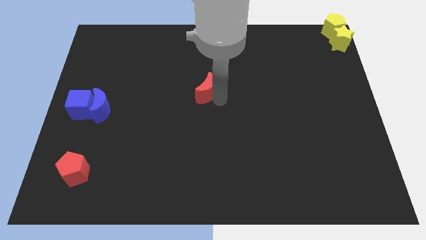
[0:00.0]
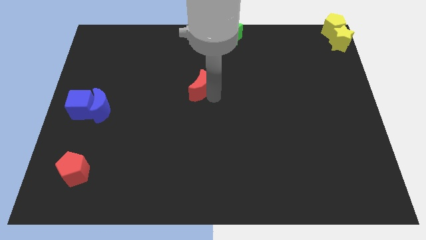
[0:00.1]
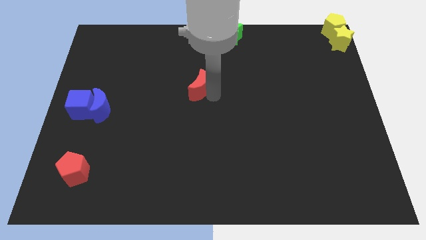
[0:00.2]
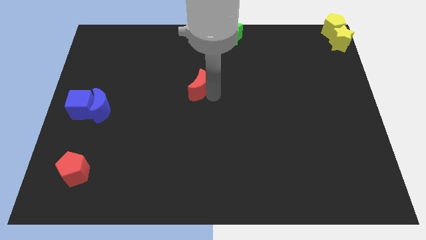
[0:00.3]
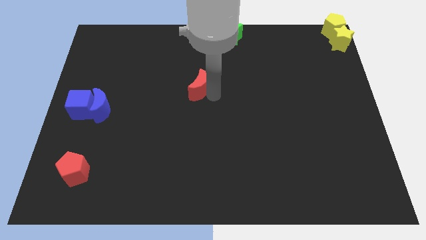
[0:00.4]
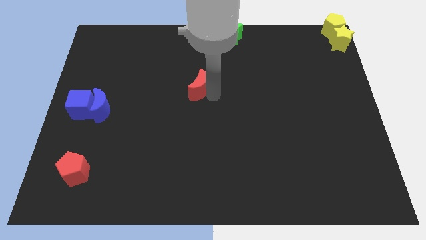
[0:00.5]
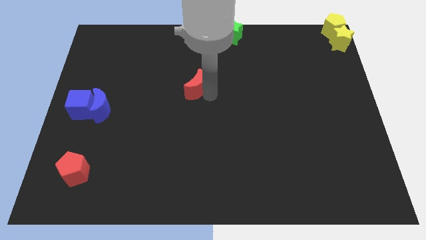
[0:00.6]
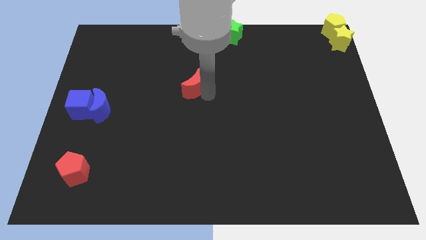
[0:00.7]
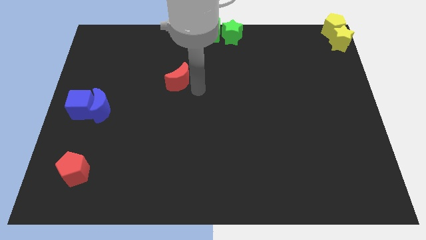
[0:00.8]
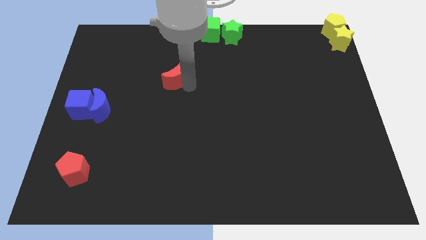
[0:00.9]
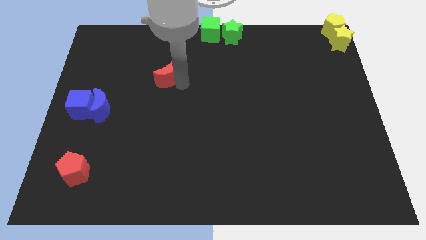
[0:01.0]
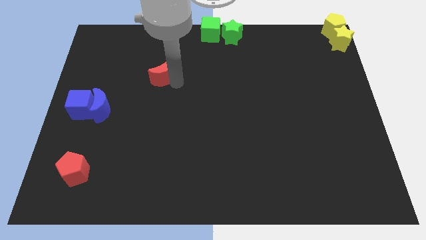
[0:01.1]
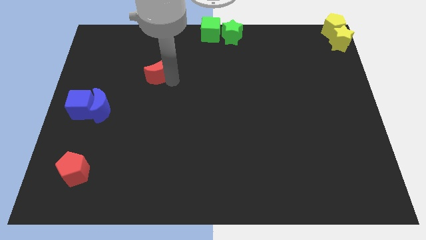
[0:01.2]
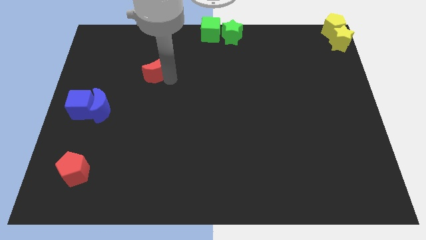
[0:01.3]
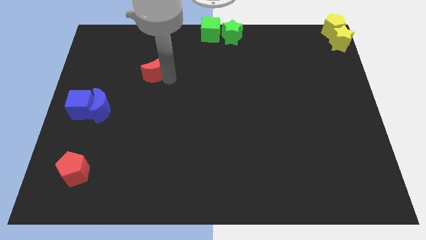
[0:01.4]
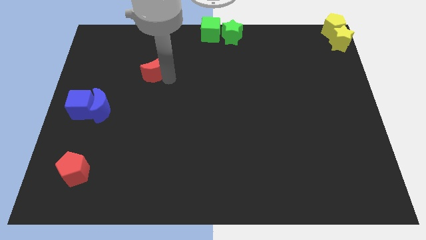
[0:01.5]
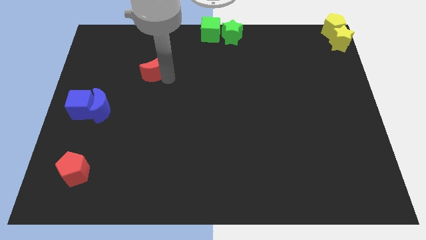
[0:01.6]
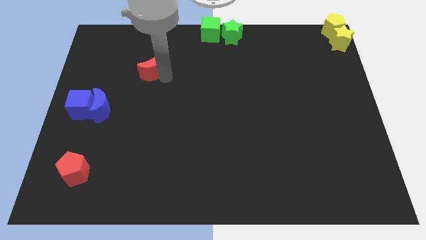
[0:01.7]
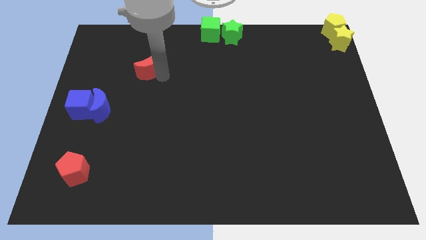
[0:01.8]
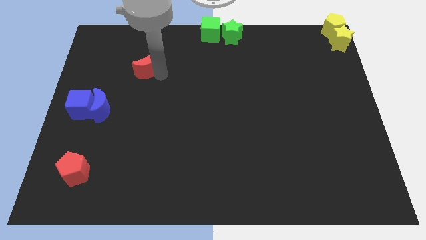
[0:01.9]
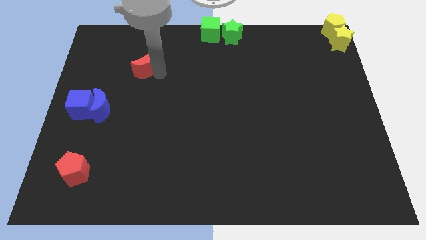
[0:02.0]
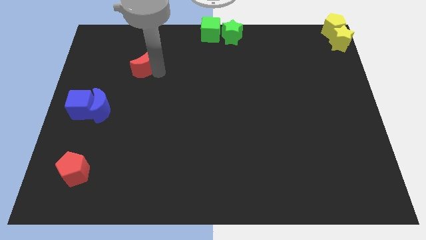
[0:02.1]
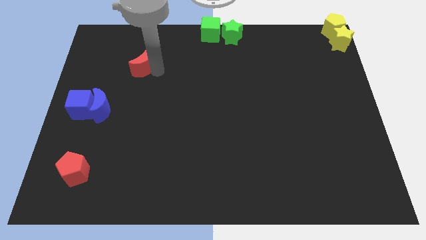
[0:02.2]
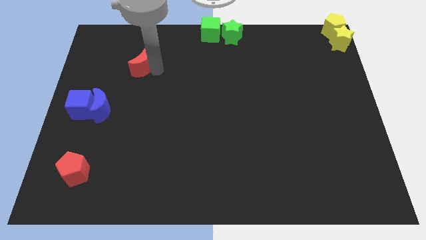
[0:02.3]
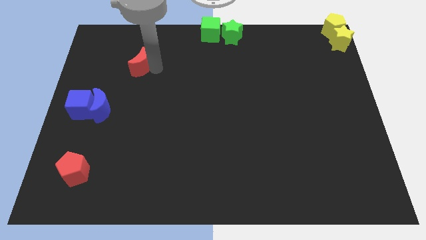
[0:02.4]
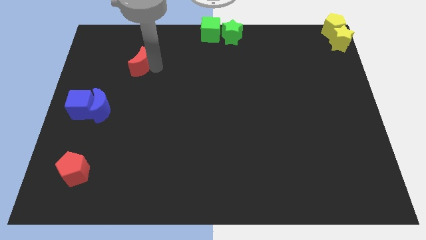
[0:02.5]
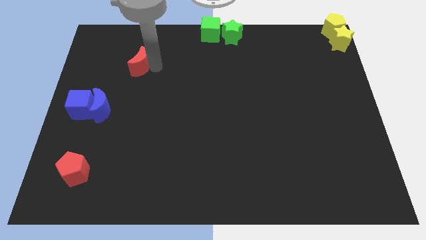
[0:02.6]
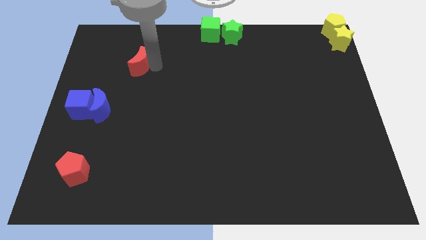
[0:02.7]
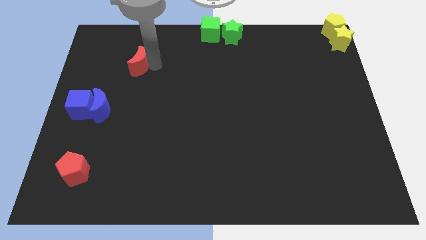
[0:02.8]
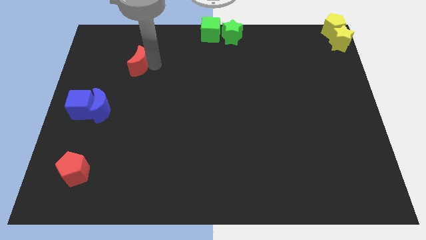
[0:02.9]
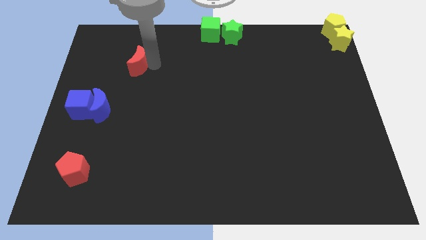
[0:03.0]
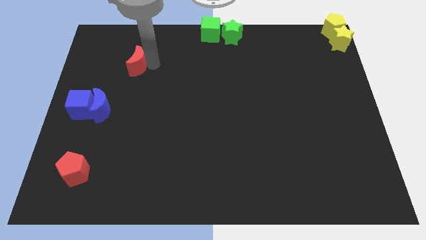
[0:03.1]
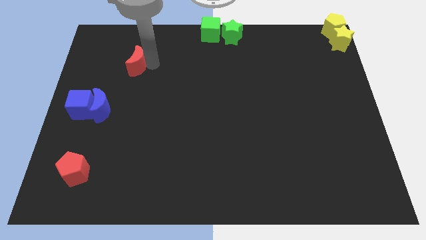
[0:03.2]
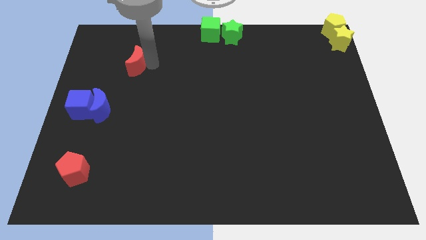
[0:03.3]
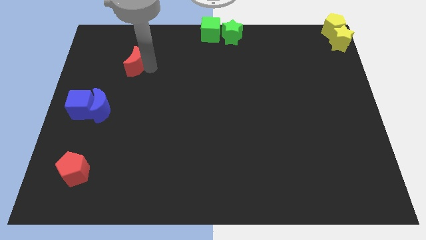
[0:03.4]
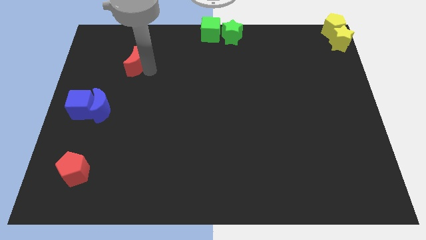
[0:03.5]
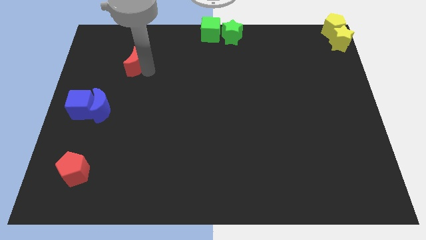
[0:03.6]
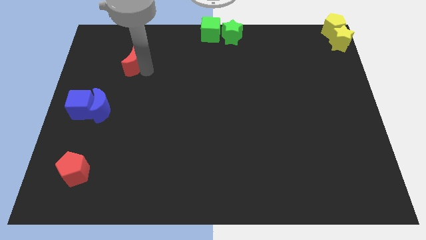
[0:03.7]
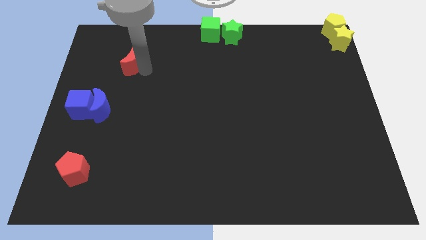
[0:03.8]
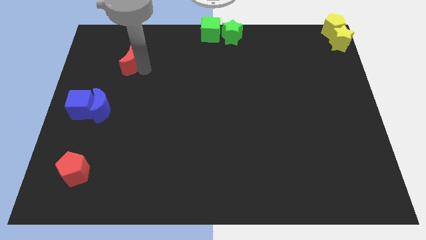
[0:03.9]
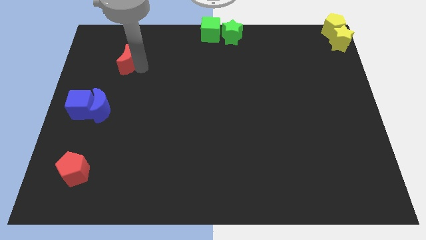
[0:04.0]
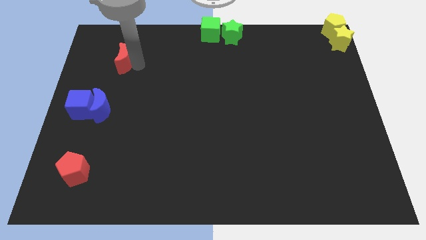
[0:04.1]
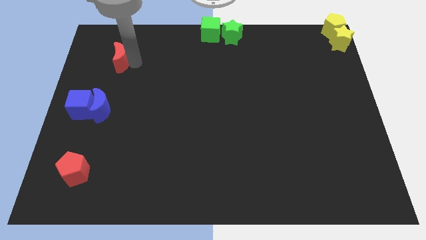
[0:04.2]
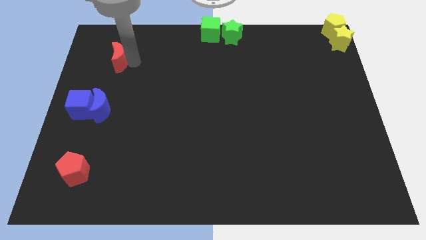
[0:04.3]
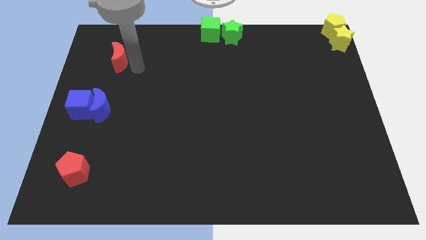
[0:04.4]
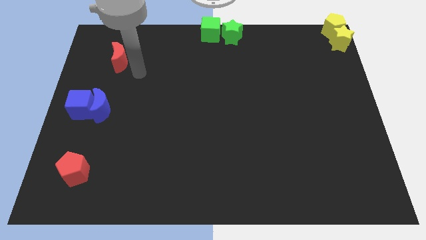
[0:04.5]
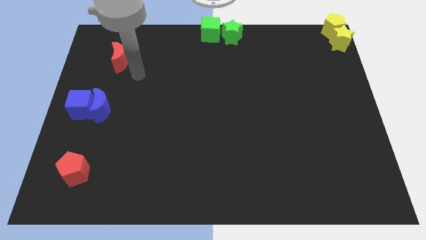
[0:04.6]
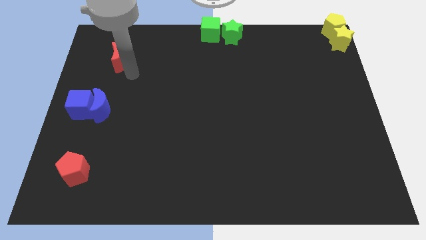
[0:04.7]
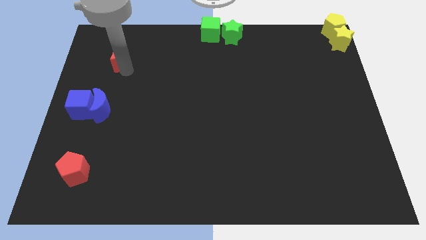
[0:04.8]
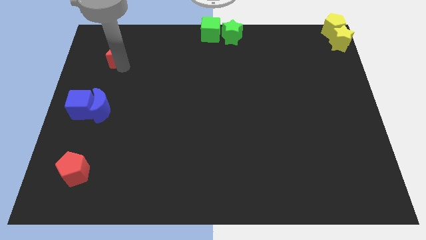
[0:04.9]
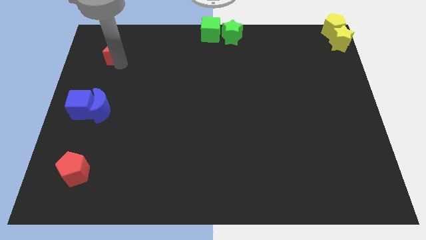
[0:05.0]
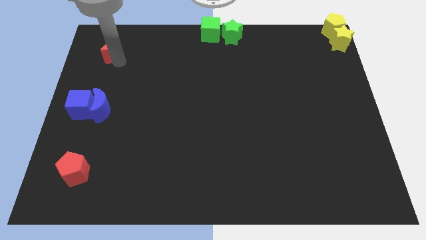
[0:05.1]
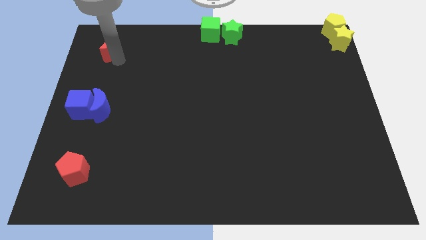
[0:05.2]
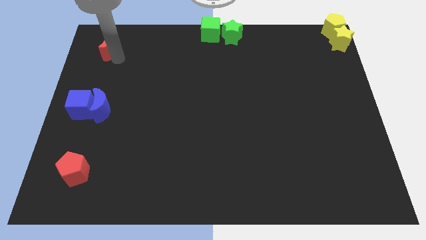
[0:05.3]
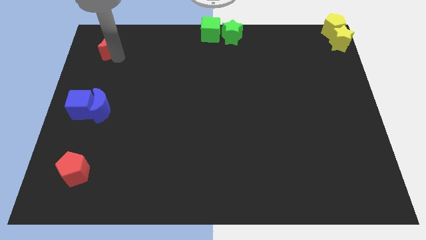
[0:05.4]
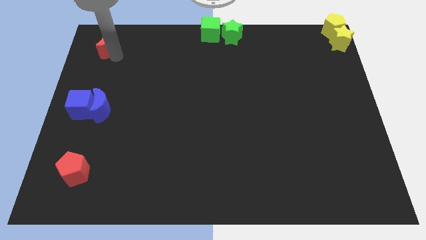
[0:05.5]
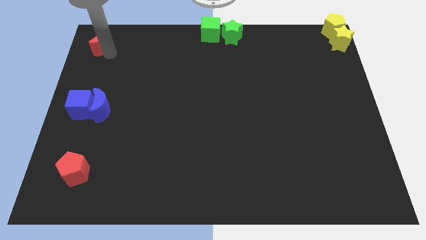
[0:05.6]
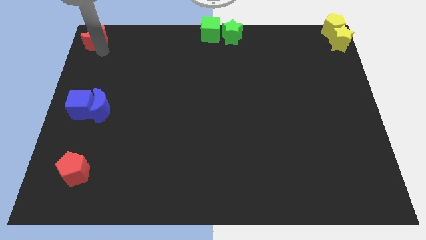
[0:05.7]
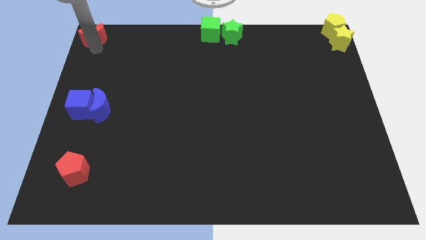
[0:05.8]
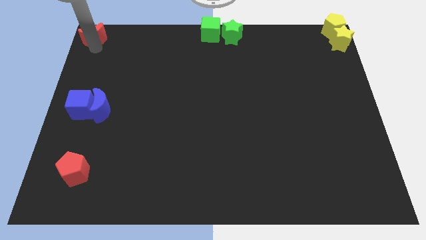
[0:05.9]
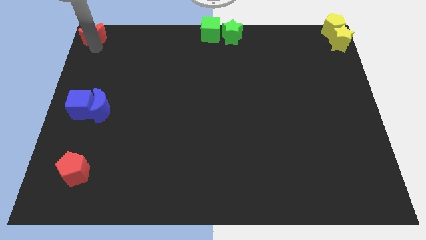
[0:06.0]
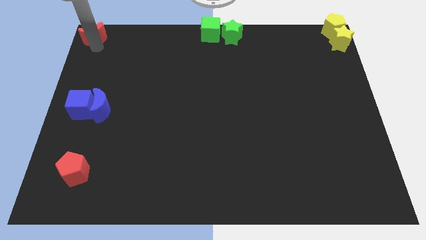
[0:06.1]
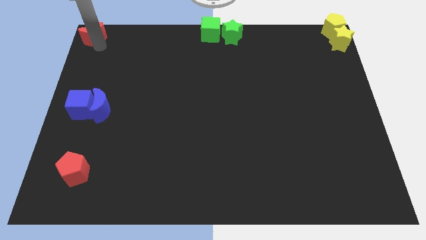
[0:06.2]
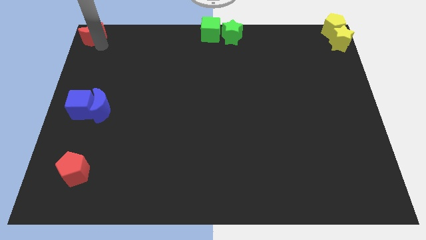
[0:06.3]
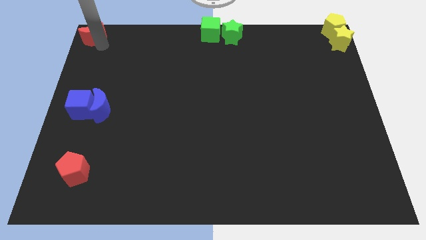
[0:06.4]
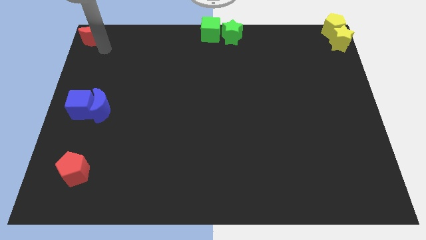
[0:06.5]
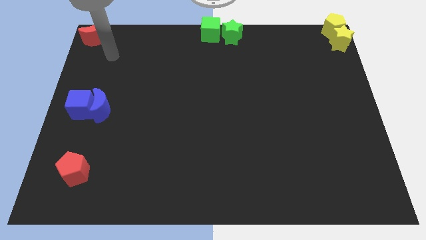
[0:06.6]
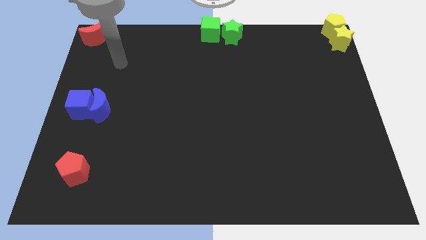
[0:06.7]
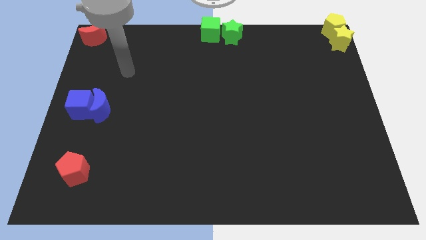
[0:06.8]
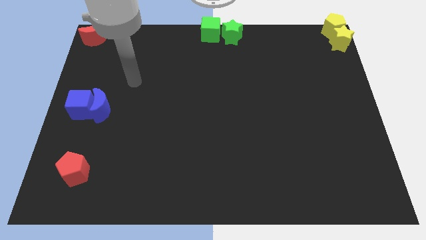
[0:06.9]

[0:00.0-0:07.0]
place the red crescent at the top left corner of the board

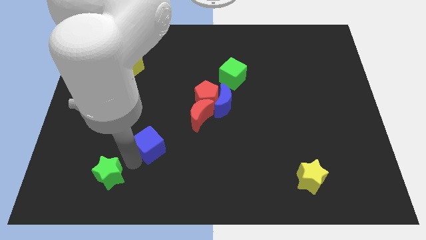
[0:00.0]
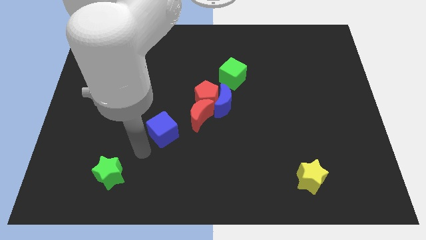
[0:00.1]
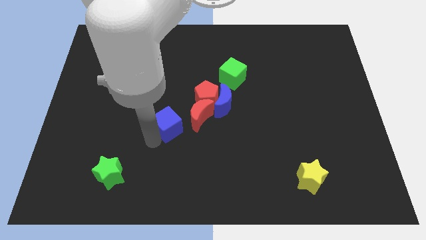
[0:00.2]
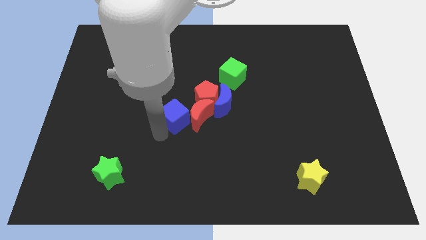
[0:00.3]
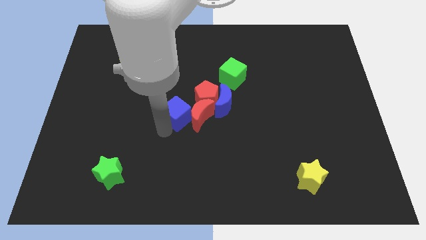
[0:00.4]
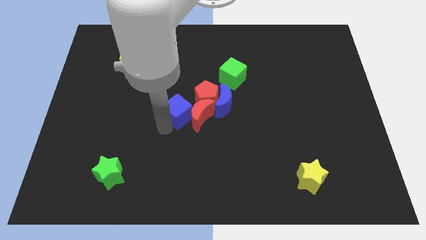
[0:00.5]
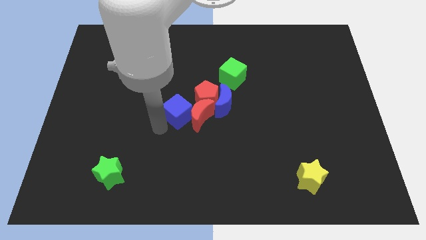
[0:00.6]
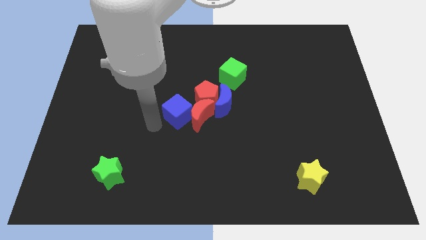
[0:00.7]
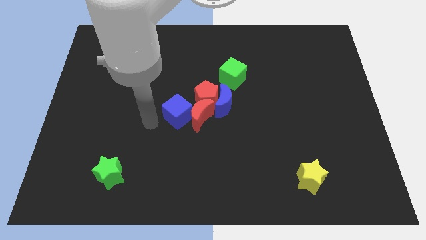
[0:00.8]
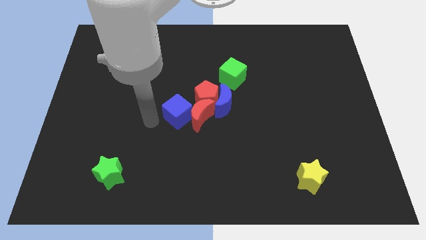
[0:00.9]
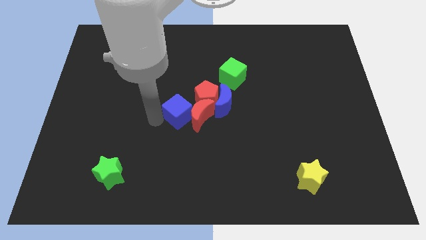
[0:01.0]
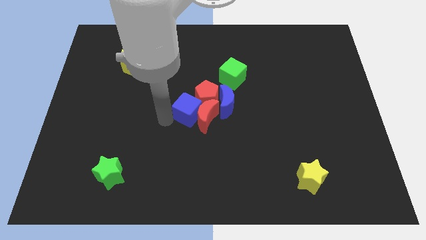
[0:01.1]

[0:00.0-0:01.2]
push the blue cube into the group of blocks at the center of the board

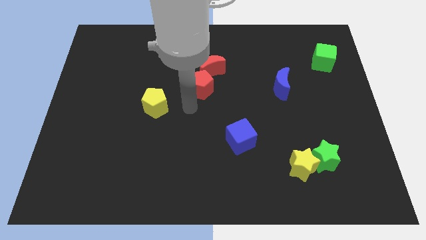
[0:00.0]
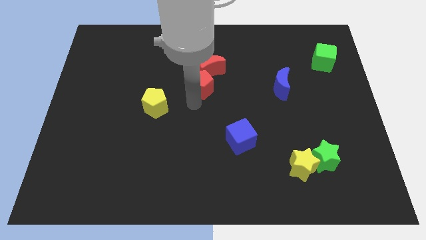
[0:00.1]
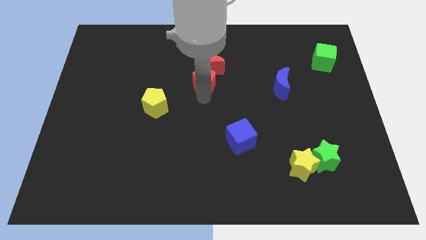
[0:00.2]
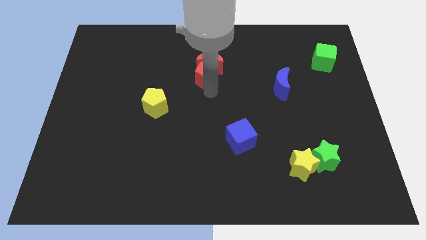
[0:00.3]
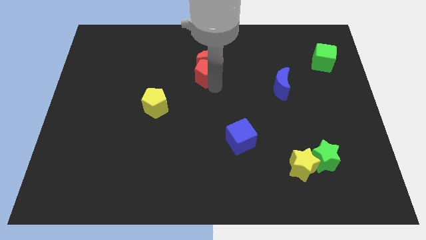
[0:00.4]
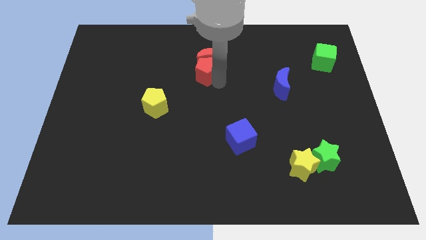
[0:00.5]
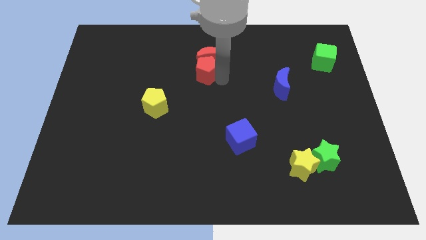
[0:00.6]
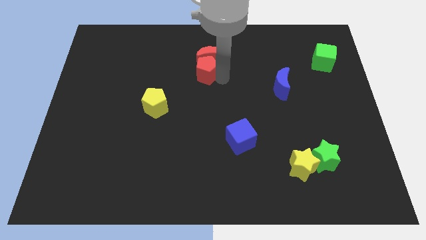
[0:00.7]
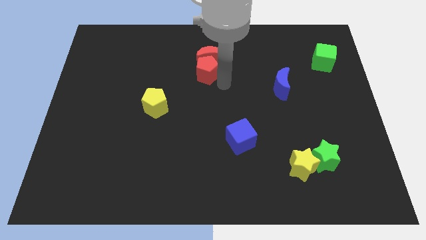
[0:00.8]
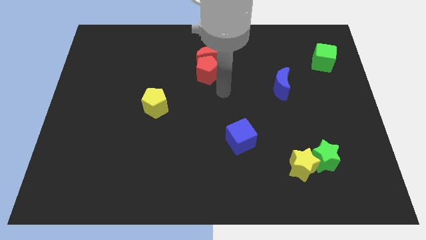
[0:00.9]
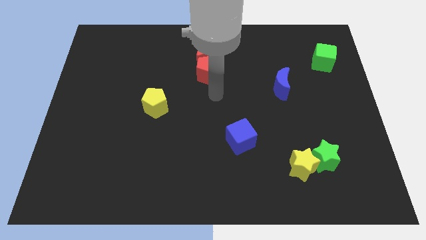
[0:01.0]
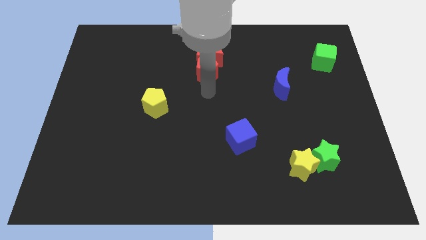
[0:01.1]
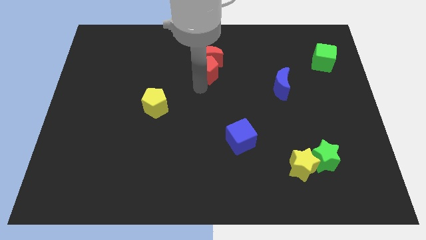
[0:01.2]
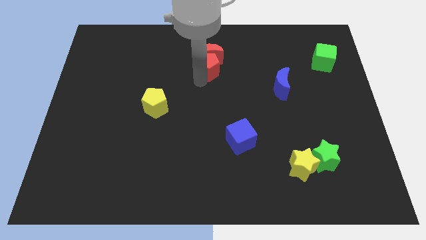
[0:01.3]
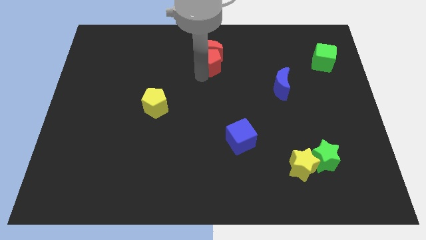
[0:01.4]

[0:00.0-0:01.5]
slide the red crescent and red pentagon towards the top side of the board
